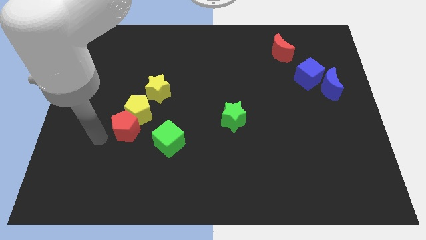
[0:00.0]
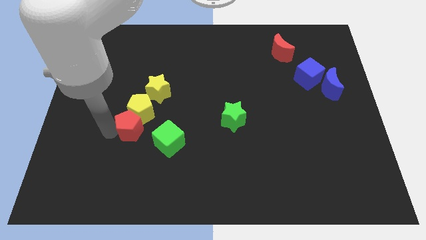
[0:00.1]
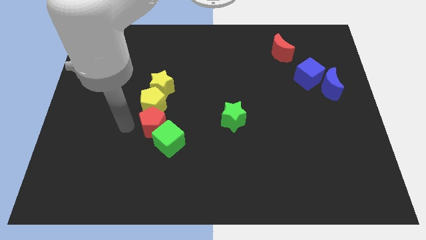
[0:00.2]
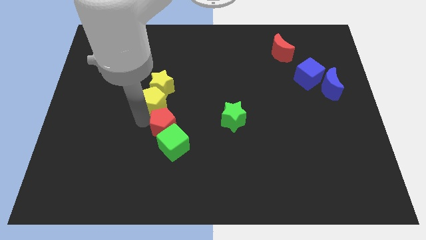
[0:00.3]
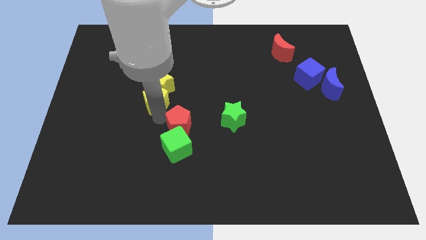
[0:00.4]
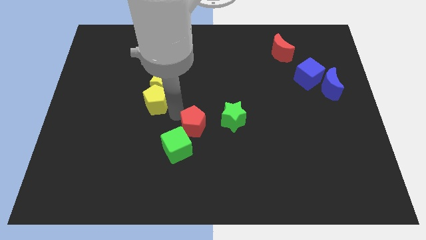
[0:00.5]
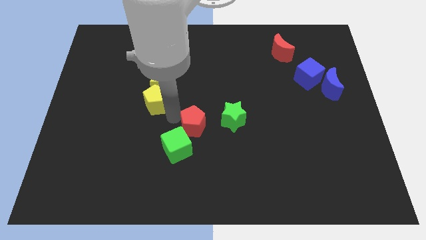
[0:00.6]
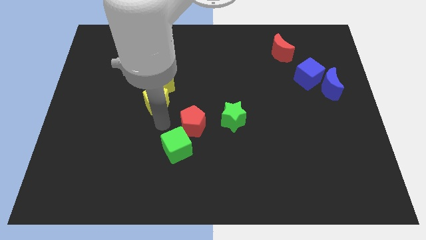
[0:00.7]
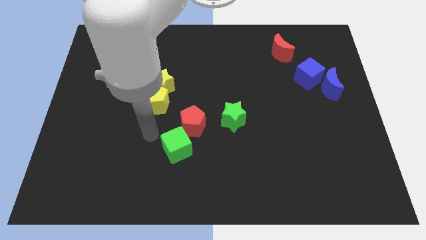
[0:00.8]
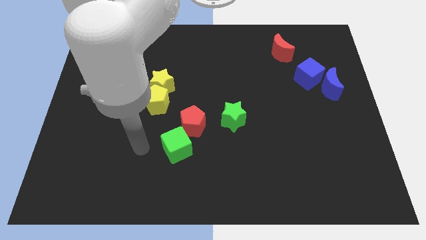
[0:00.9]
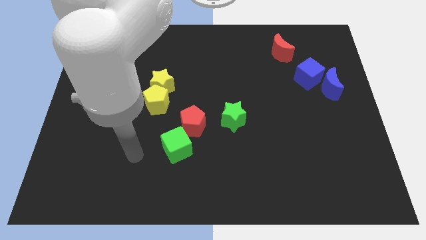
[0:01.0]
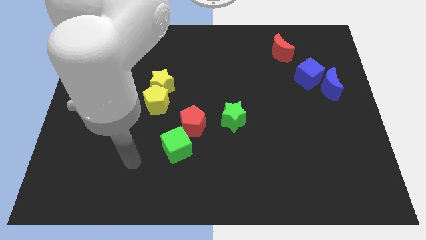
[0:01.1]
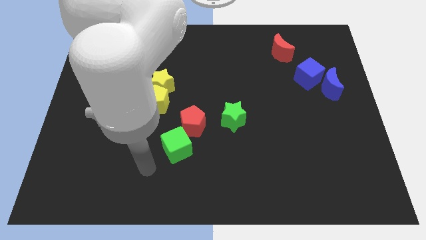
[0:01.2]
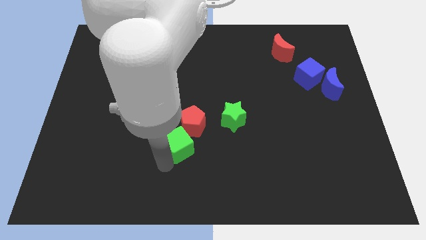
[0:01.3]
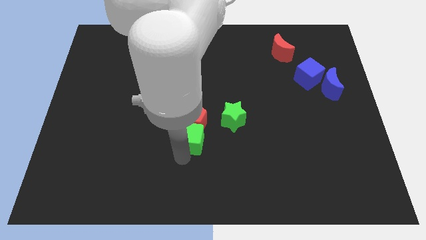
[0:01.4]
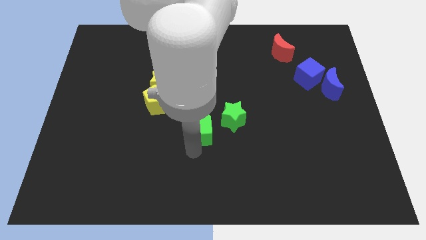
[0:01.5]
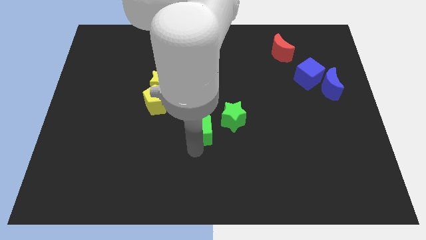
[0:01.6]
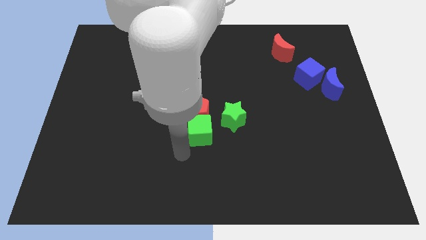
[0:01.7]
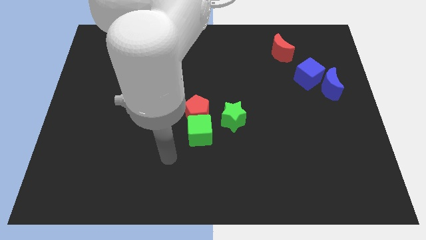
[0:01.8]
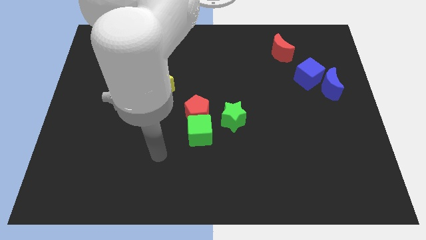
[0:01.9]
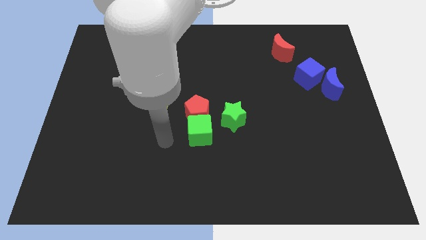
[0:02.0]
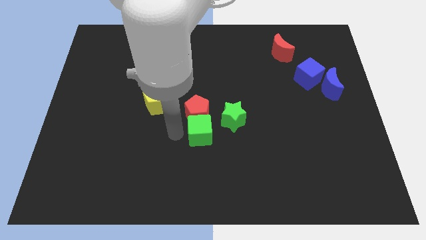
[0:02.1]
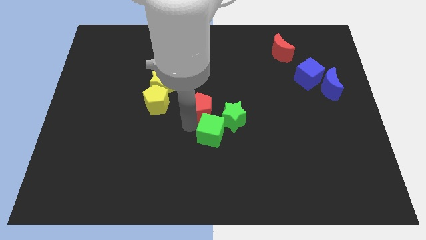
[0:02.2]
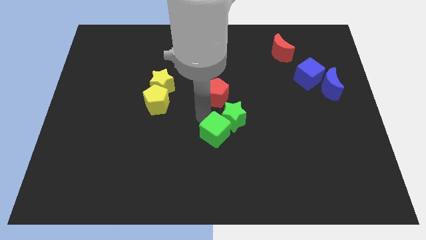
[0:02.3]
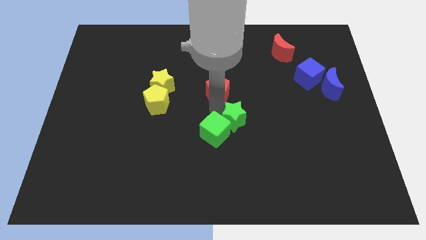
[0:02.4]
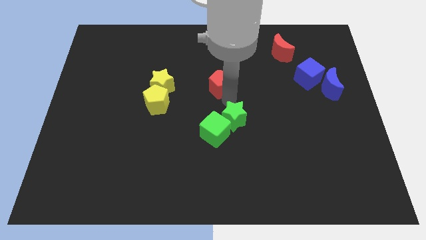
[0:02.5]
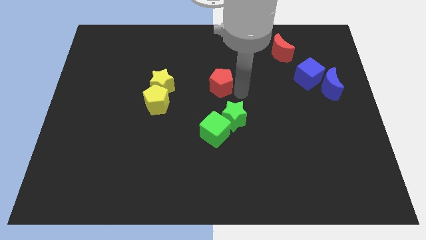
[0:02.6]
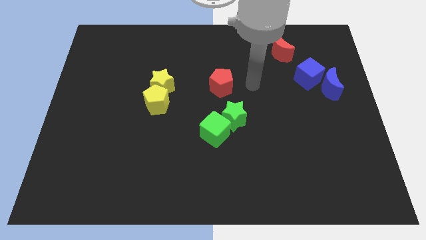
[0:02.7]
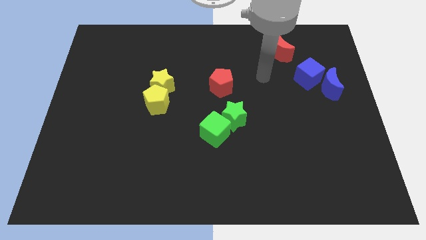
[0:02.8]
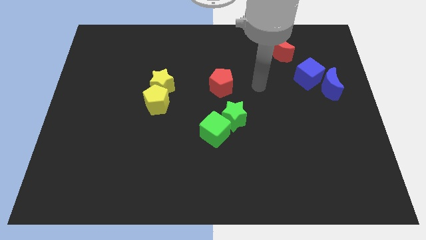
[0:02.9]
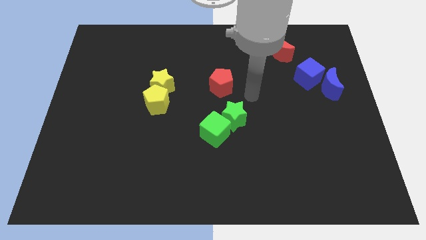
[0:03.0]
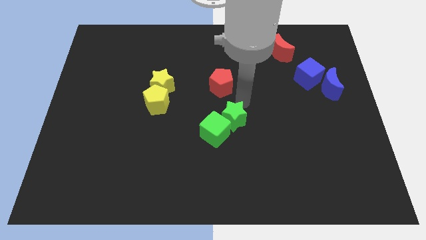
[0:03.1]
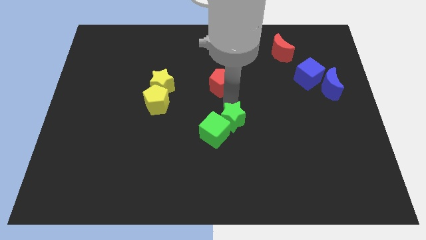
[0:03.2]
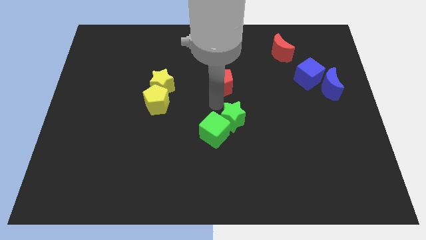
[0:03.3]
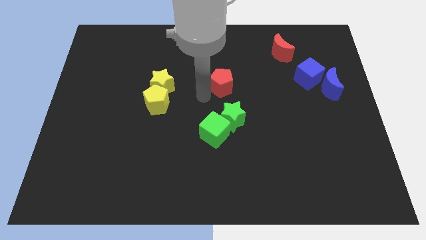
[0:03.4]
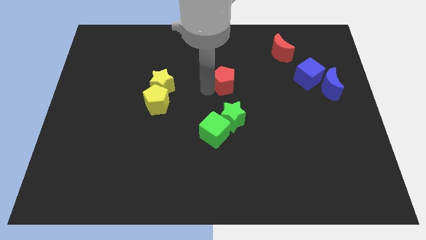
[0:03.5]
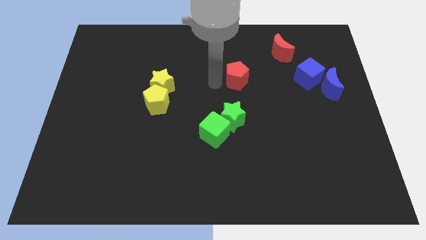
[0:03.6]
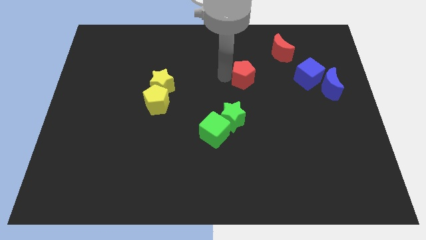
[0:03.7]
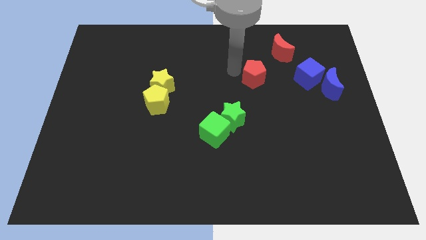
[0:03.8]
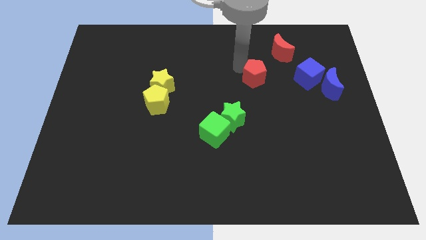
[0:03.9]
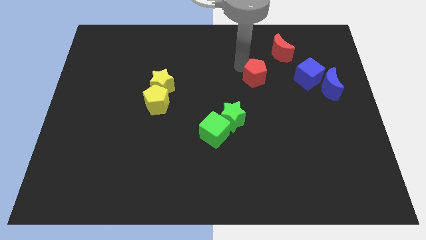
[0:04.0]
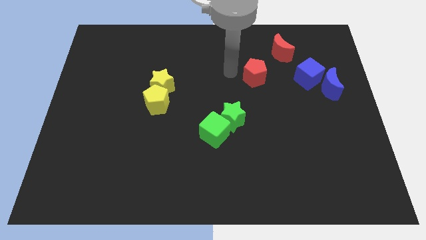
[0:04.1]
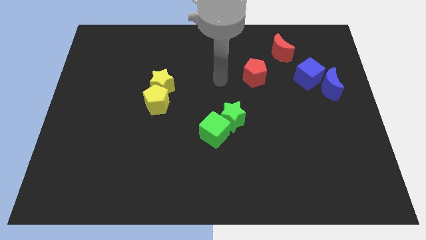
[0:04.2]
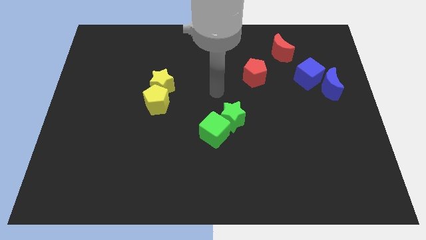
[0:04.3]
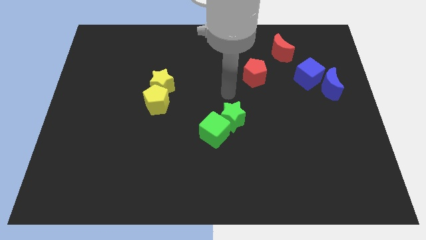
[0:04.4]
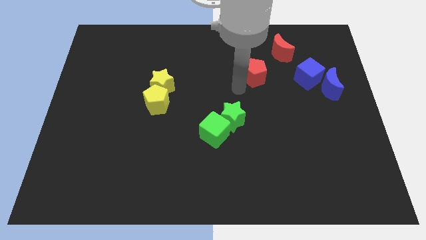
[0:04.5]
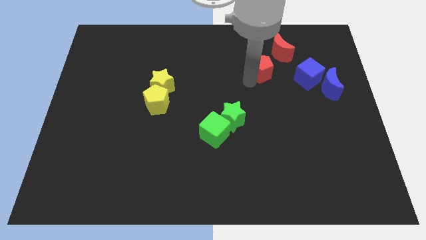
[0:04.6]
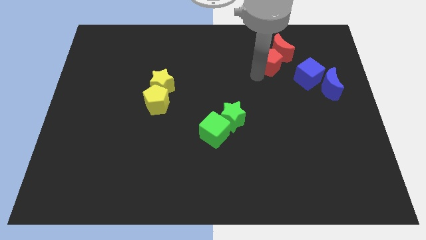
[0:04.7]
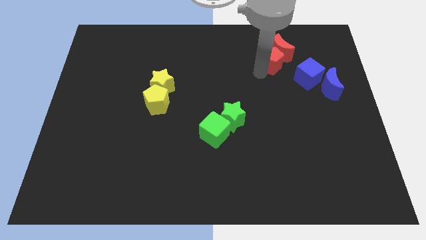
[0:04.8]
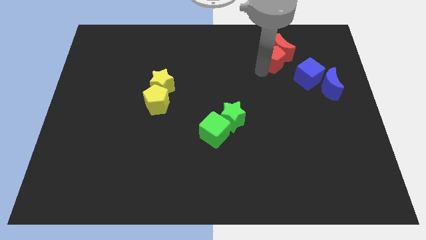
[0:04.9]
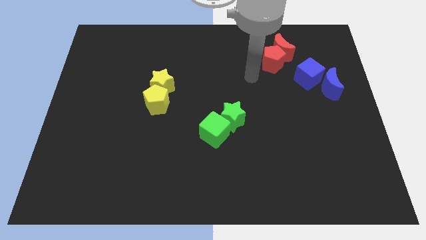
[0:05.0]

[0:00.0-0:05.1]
push the red pentagon into red moon

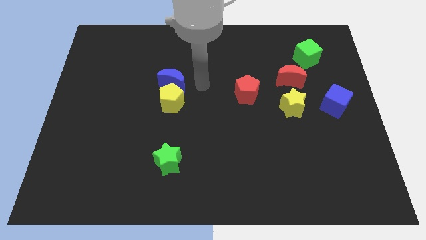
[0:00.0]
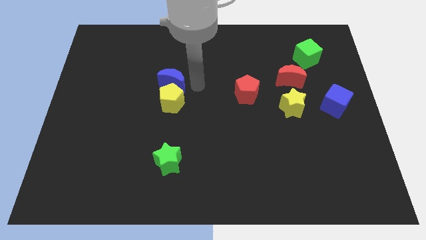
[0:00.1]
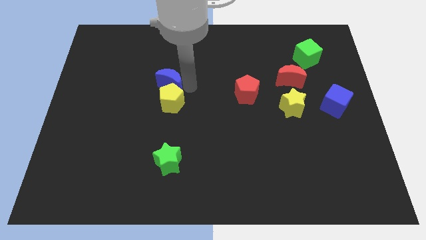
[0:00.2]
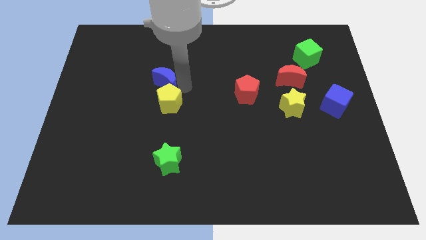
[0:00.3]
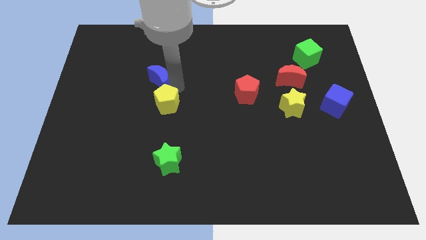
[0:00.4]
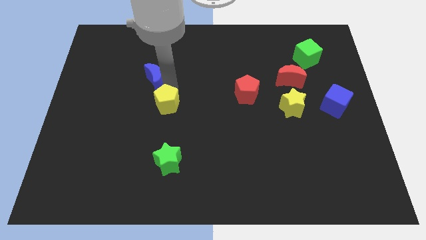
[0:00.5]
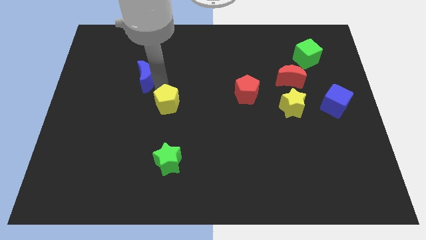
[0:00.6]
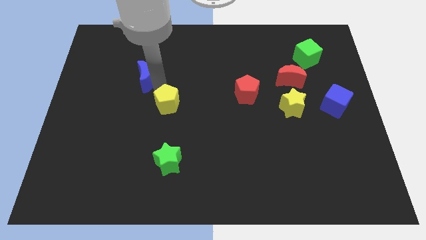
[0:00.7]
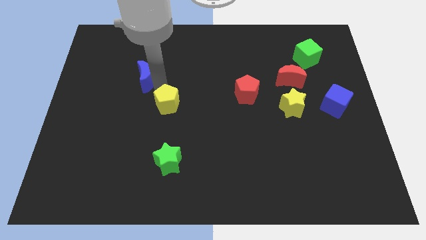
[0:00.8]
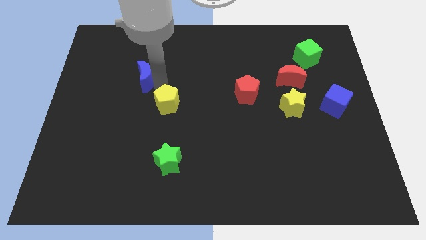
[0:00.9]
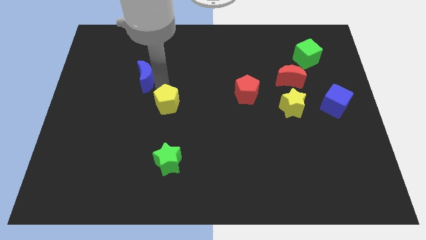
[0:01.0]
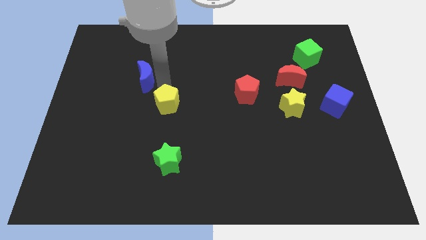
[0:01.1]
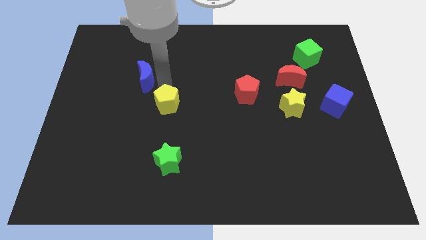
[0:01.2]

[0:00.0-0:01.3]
separate the blue crescent from the yellow pentagon

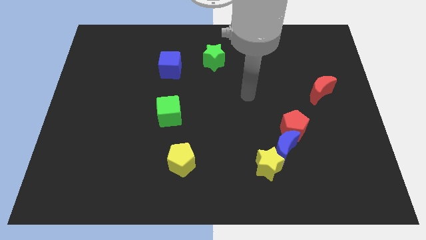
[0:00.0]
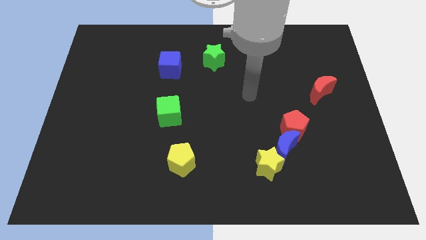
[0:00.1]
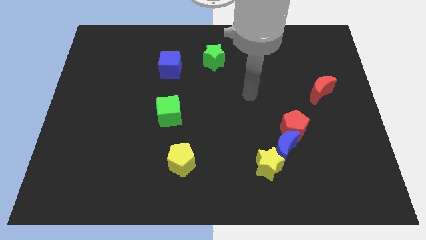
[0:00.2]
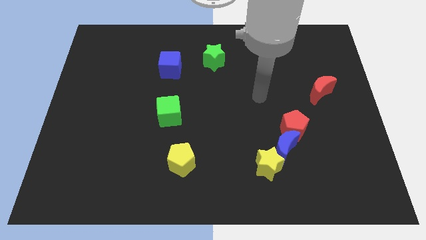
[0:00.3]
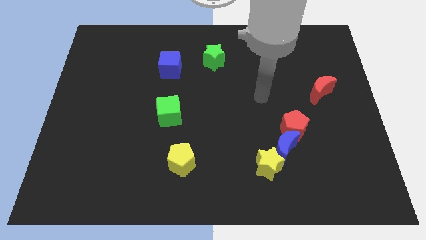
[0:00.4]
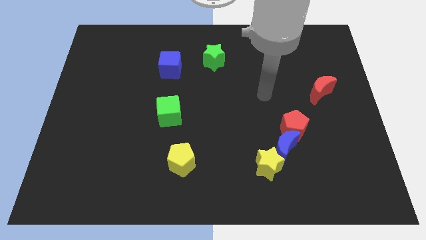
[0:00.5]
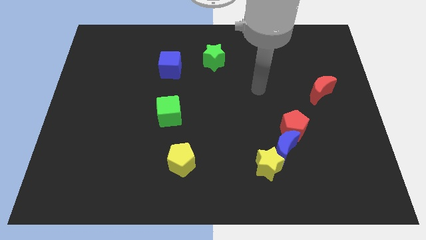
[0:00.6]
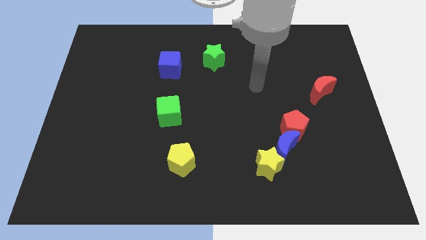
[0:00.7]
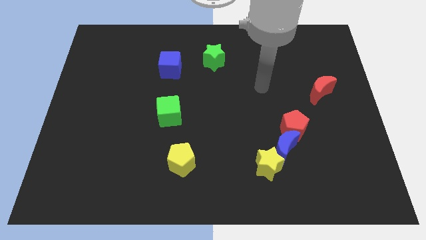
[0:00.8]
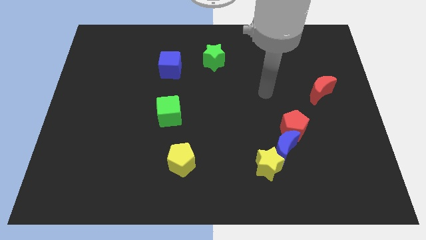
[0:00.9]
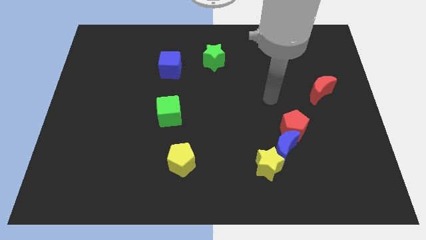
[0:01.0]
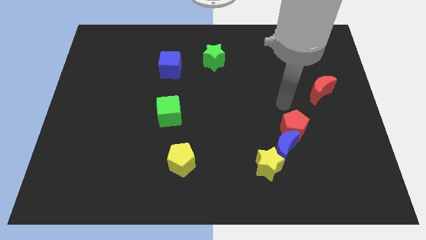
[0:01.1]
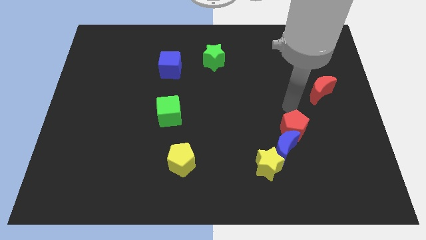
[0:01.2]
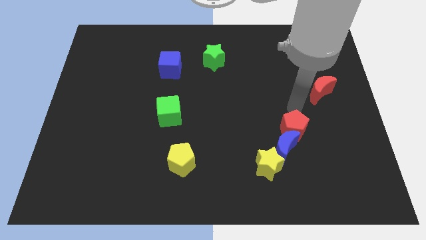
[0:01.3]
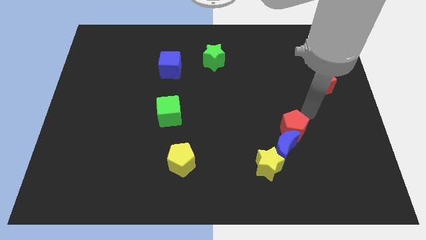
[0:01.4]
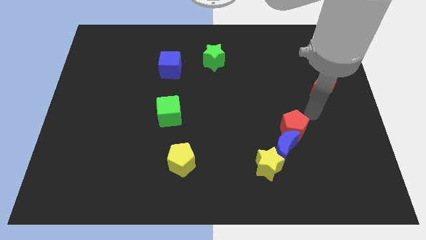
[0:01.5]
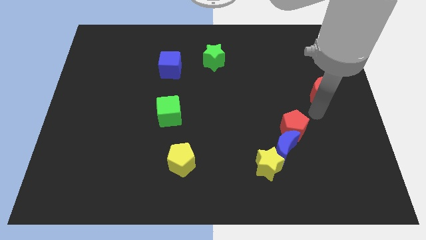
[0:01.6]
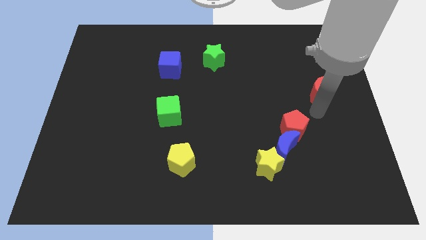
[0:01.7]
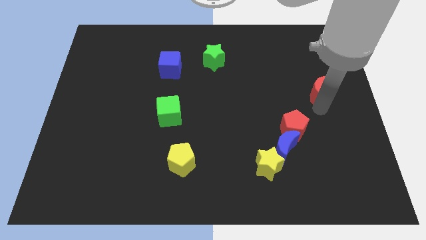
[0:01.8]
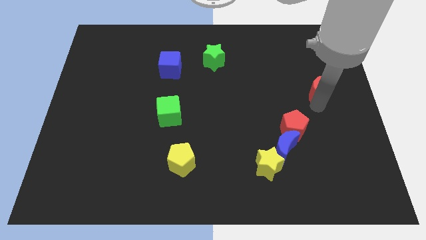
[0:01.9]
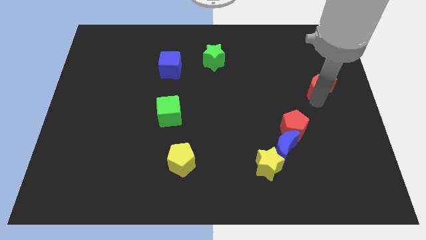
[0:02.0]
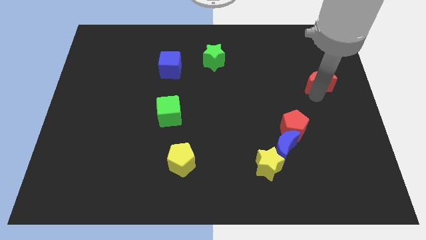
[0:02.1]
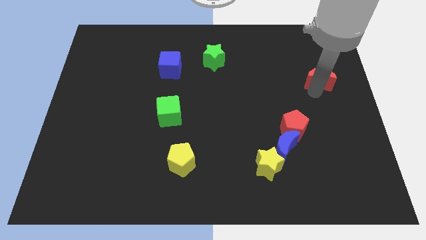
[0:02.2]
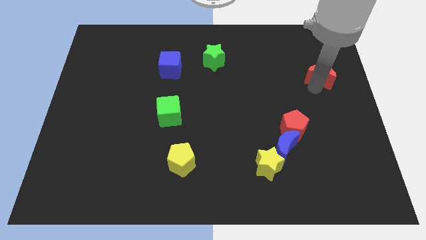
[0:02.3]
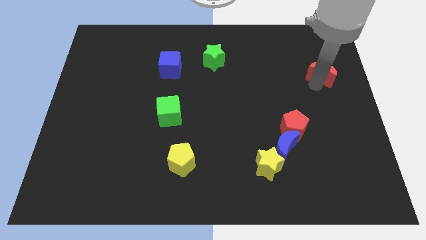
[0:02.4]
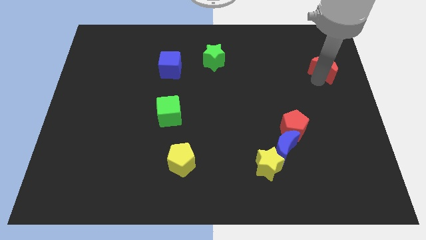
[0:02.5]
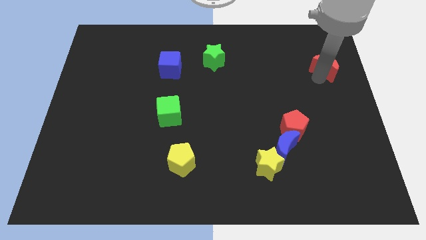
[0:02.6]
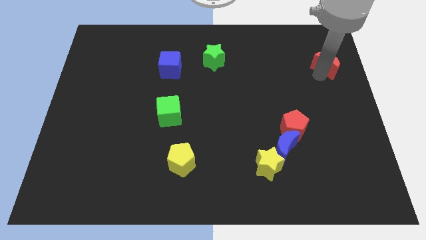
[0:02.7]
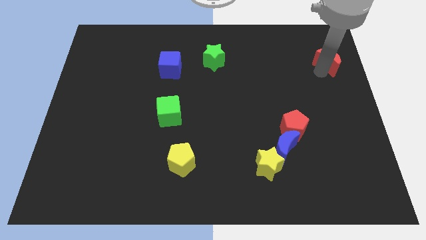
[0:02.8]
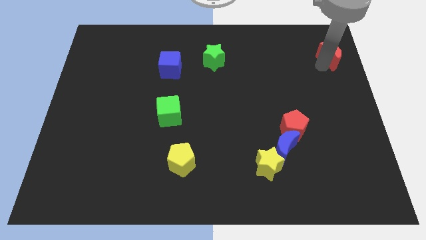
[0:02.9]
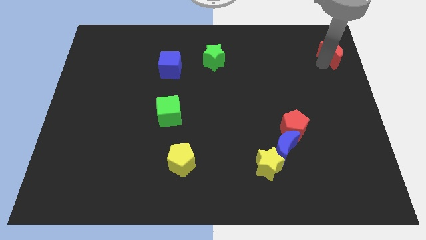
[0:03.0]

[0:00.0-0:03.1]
push the red crescent towards the top right corner
